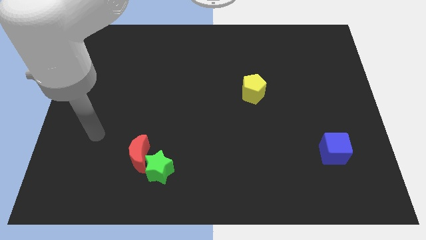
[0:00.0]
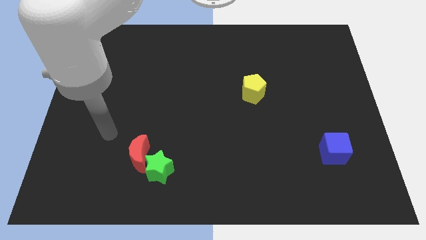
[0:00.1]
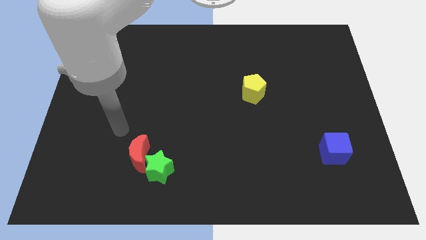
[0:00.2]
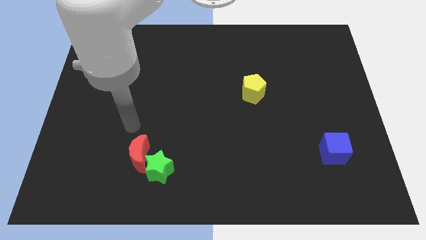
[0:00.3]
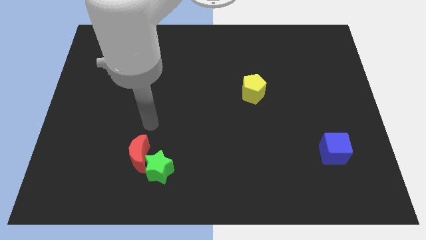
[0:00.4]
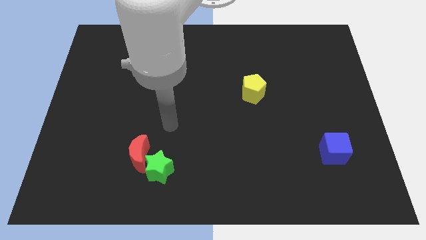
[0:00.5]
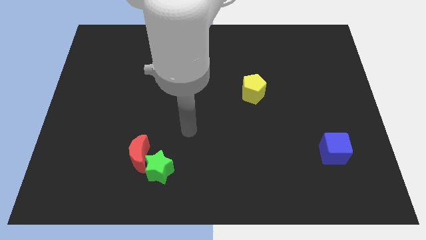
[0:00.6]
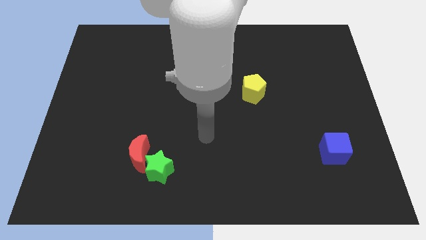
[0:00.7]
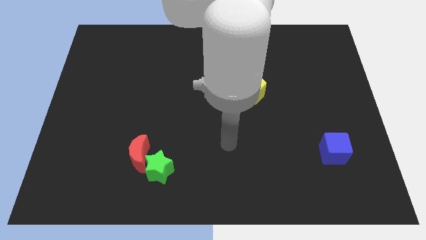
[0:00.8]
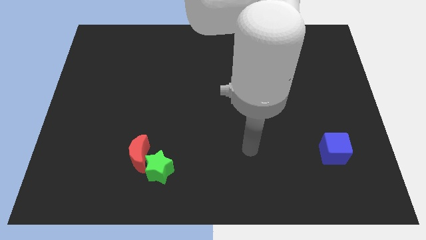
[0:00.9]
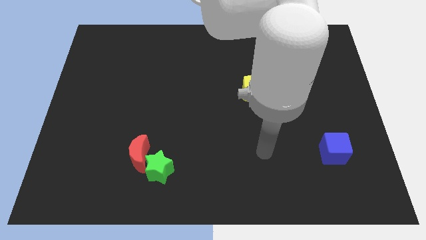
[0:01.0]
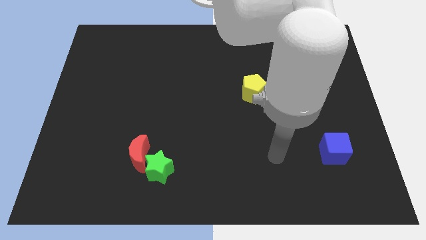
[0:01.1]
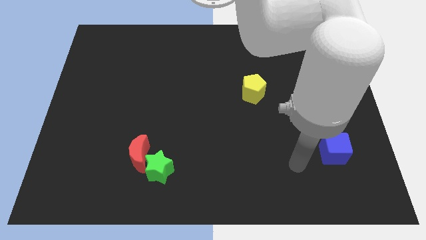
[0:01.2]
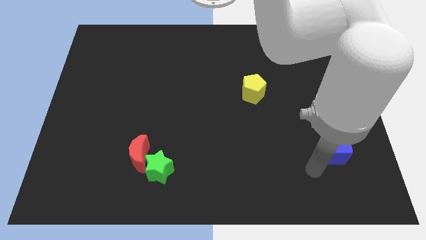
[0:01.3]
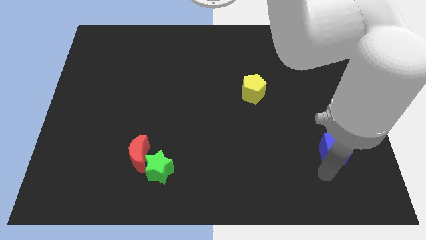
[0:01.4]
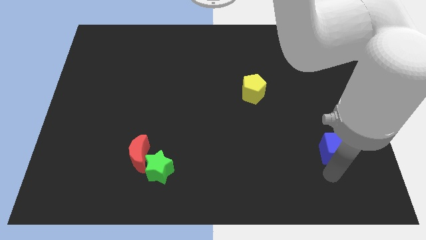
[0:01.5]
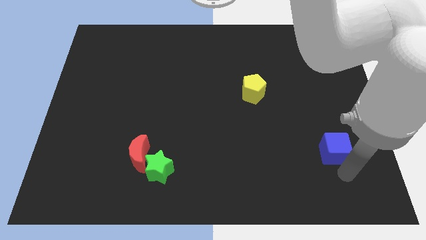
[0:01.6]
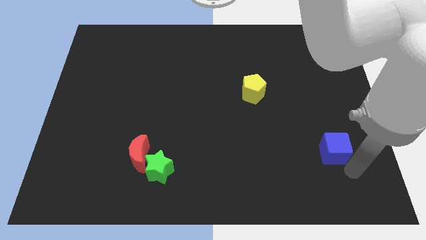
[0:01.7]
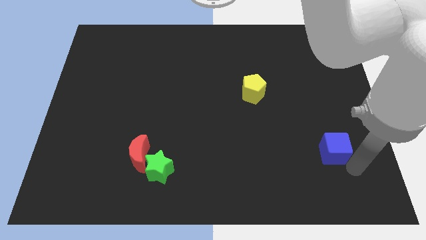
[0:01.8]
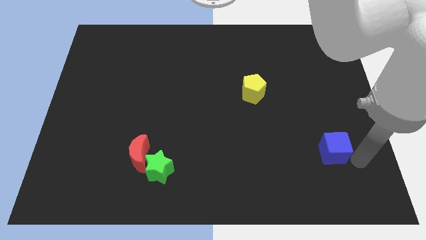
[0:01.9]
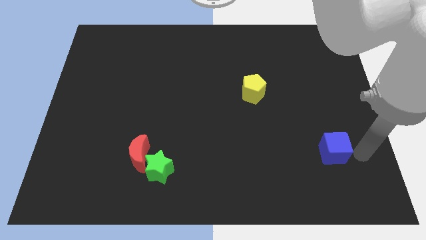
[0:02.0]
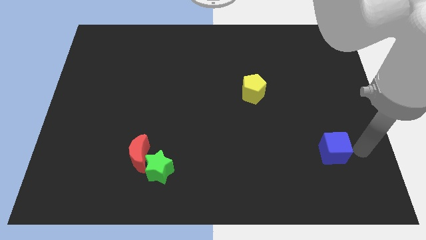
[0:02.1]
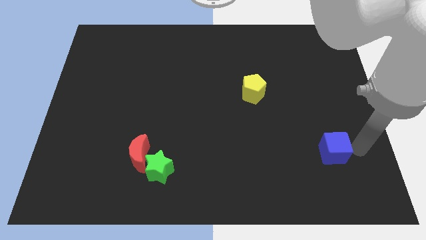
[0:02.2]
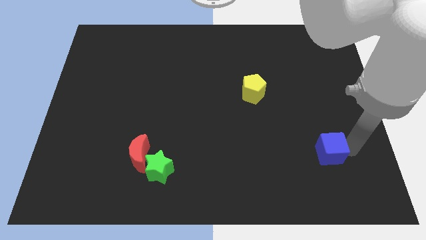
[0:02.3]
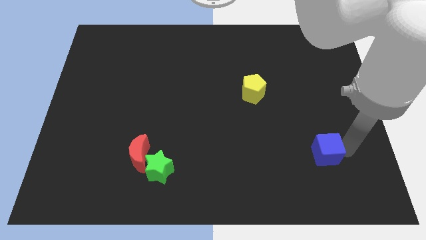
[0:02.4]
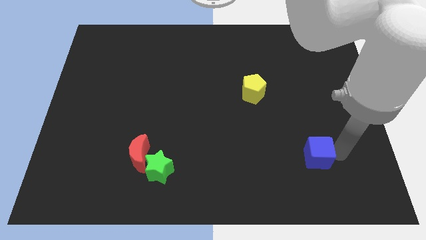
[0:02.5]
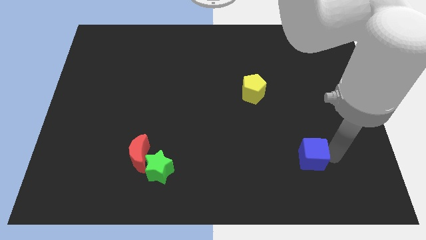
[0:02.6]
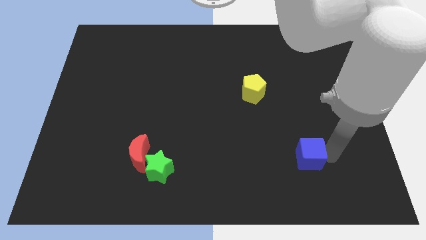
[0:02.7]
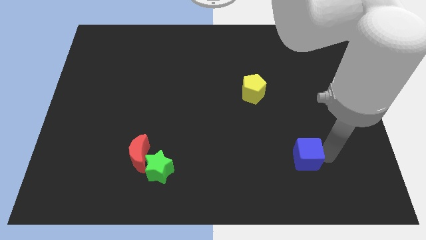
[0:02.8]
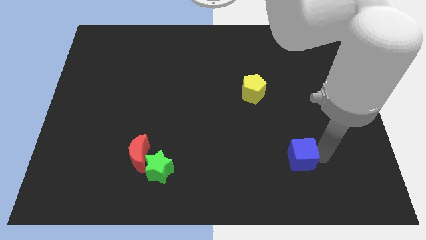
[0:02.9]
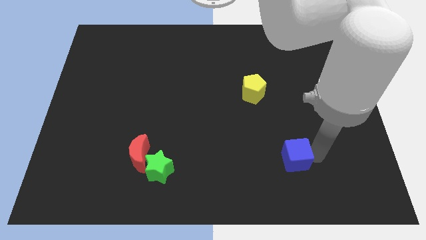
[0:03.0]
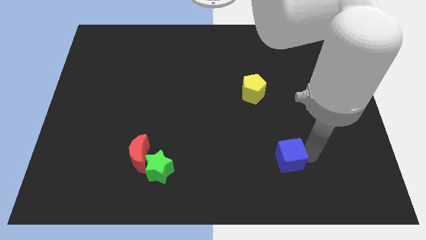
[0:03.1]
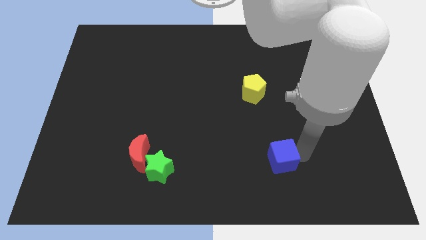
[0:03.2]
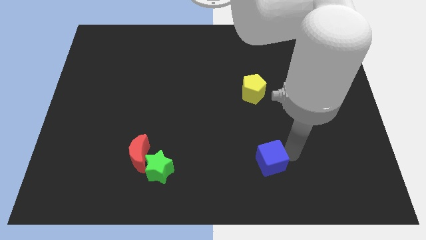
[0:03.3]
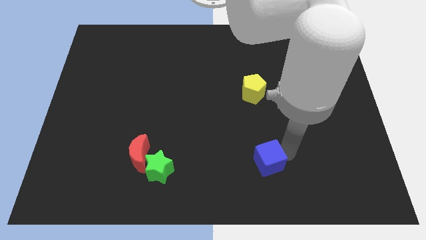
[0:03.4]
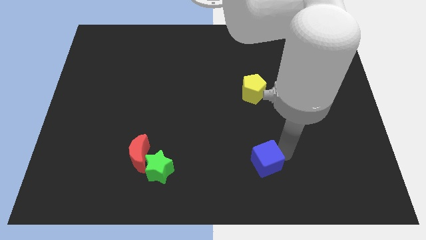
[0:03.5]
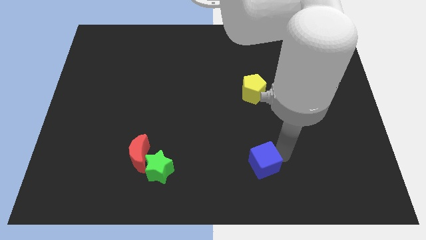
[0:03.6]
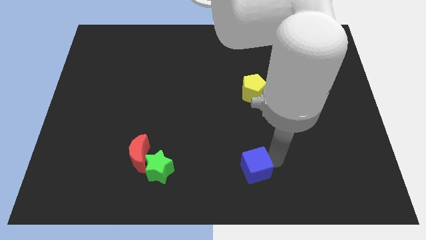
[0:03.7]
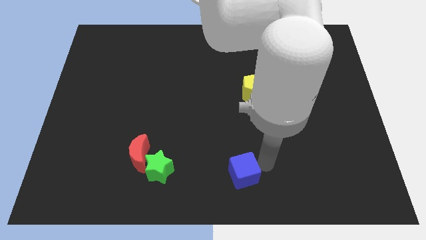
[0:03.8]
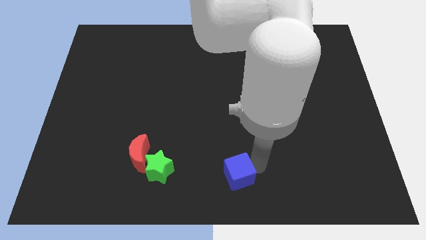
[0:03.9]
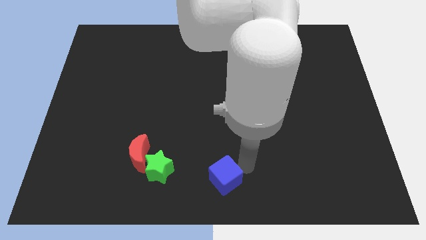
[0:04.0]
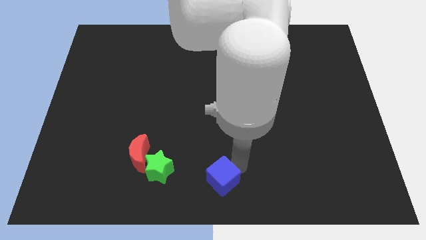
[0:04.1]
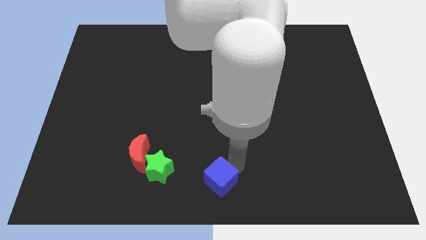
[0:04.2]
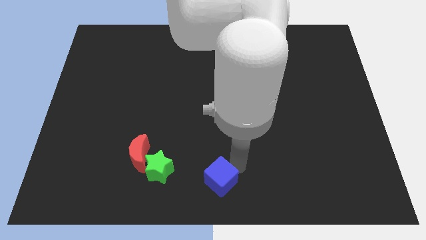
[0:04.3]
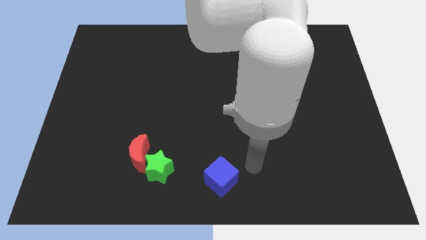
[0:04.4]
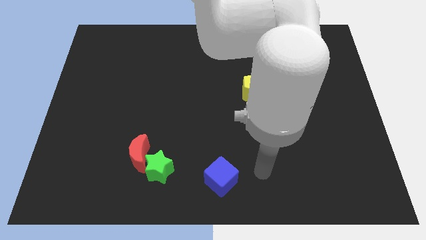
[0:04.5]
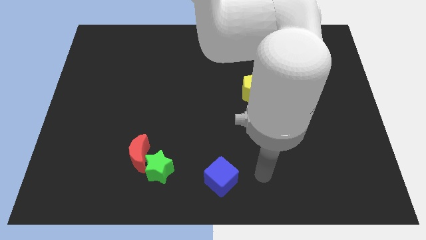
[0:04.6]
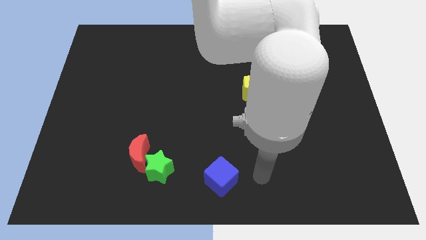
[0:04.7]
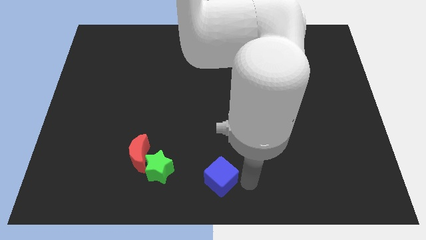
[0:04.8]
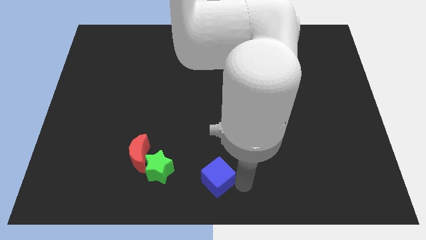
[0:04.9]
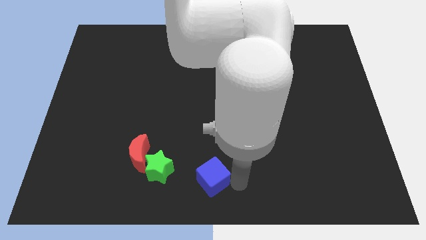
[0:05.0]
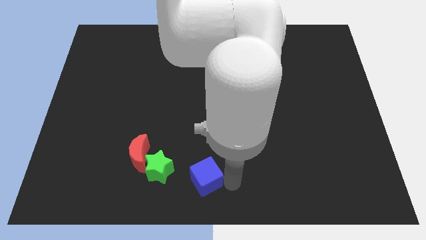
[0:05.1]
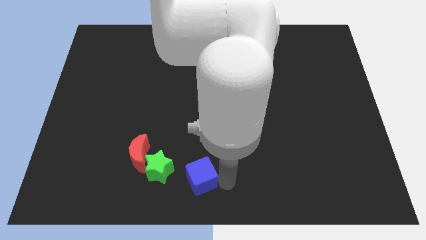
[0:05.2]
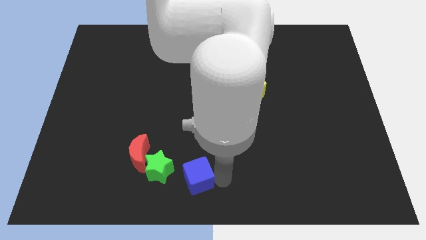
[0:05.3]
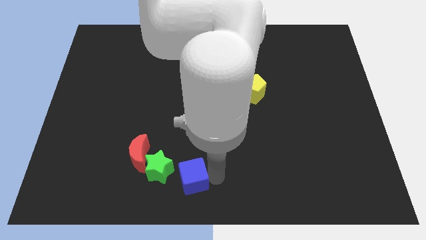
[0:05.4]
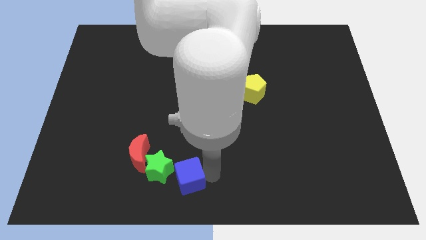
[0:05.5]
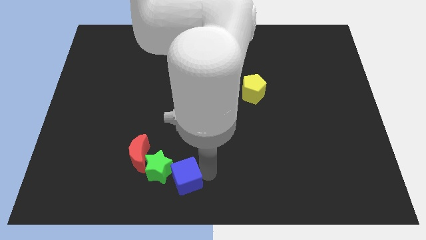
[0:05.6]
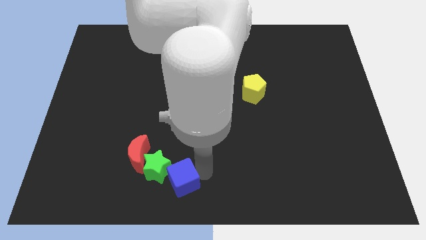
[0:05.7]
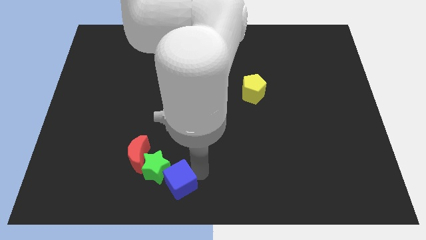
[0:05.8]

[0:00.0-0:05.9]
put the cube towards the green block

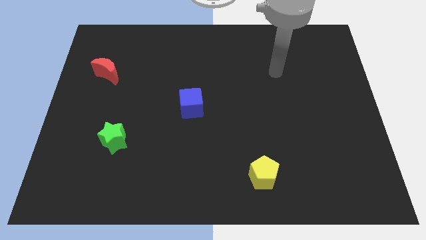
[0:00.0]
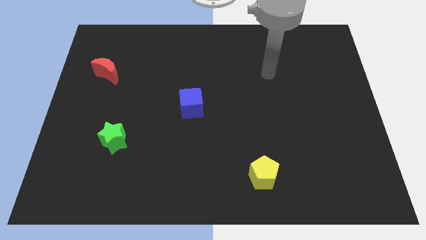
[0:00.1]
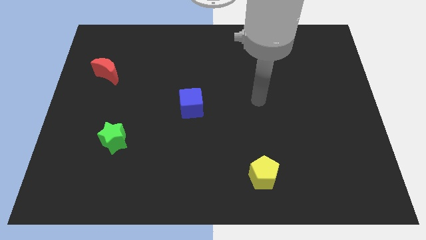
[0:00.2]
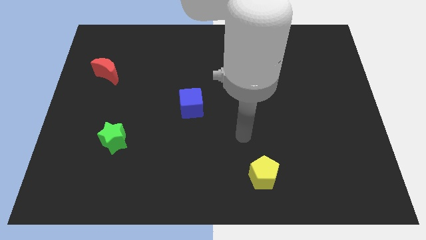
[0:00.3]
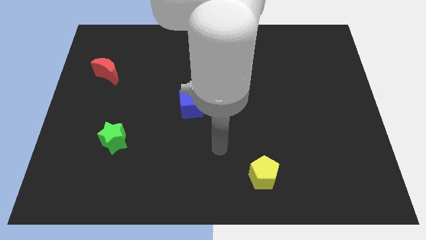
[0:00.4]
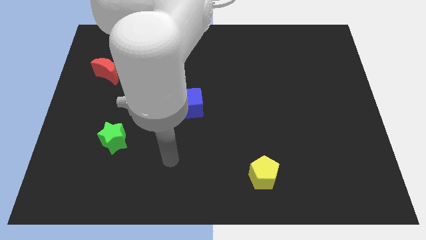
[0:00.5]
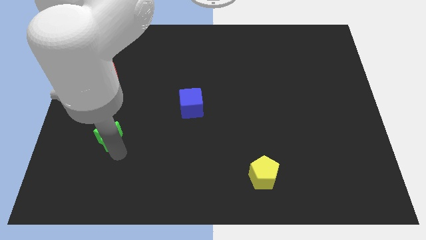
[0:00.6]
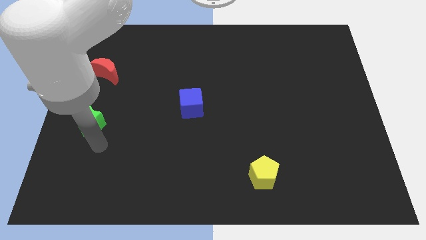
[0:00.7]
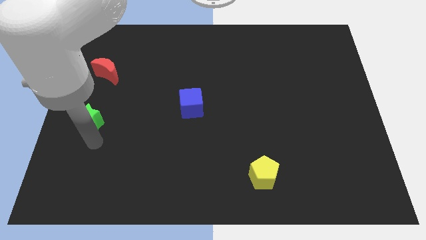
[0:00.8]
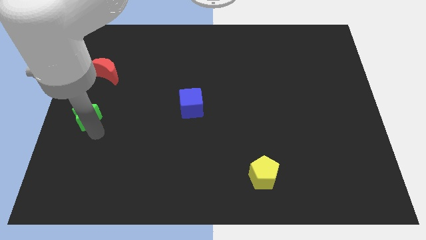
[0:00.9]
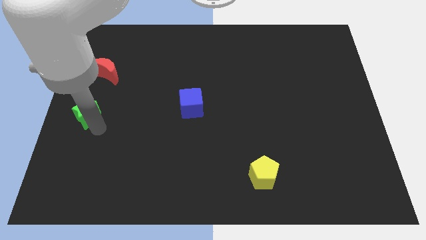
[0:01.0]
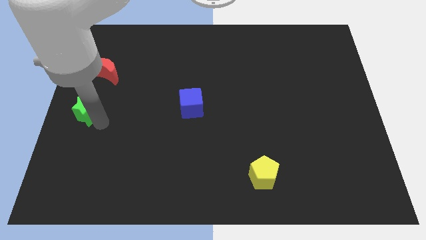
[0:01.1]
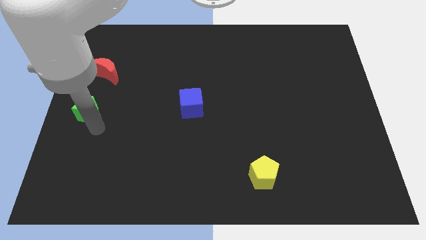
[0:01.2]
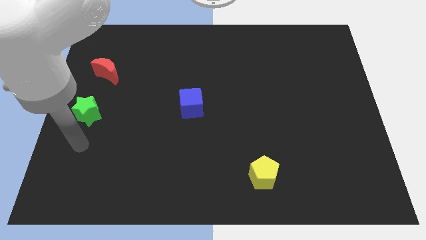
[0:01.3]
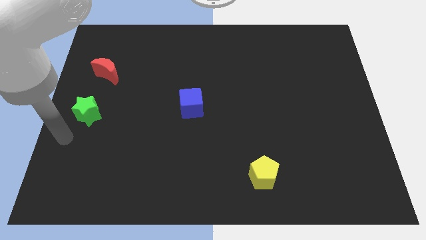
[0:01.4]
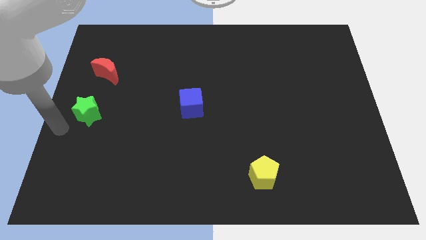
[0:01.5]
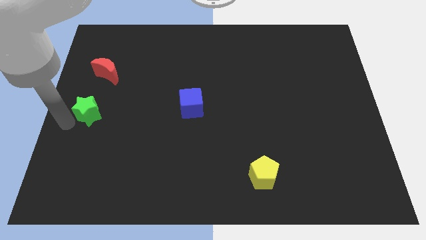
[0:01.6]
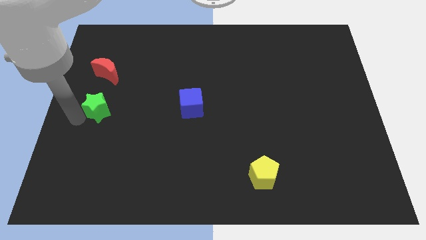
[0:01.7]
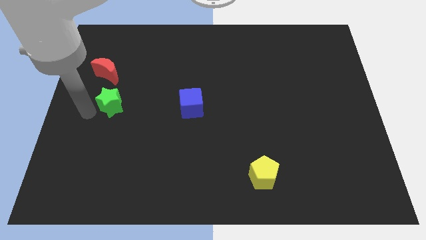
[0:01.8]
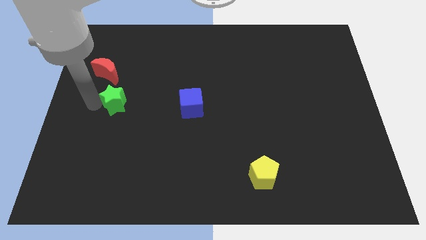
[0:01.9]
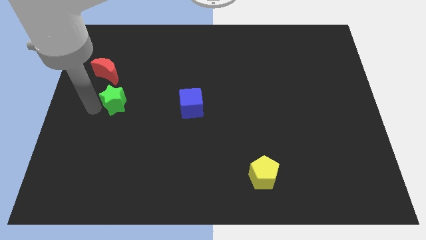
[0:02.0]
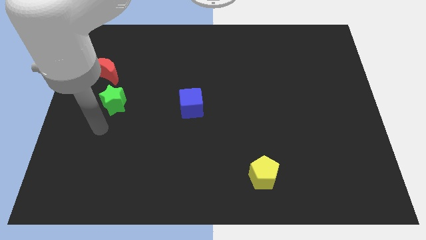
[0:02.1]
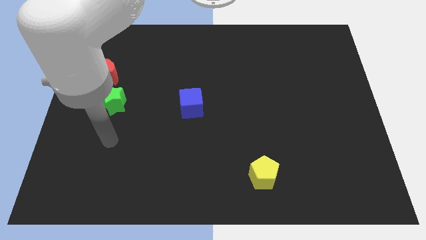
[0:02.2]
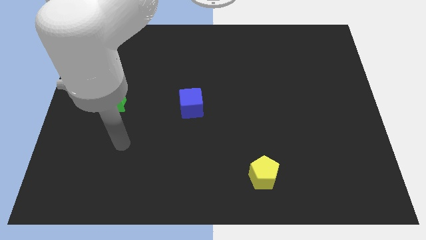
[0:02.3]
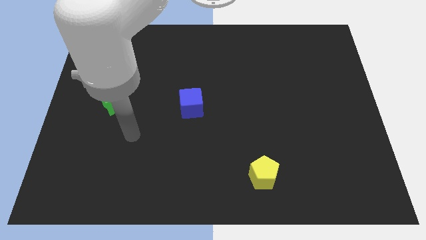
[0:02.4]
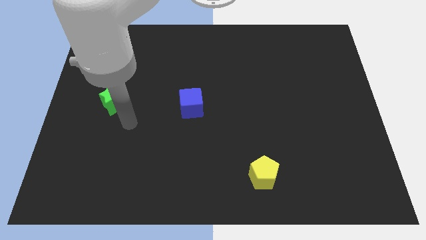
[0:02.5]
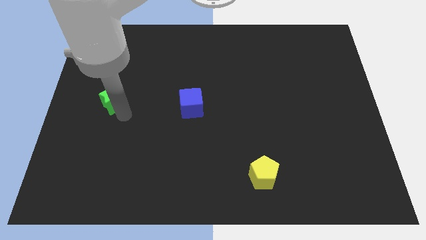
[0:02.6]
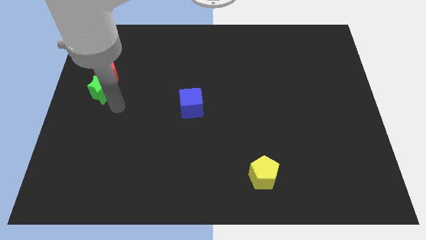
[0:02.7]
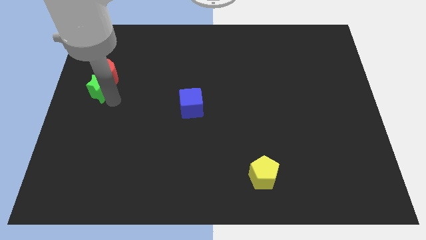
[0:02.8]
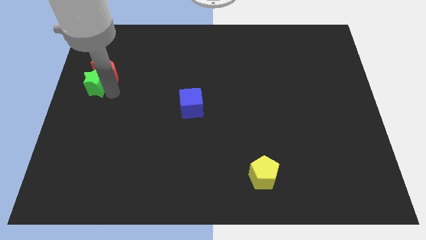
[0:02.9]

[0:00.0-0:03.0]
move the green star towards the moon

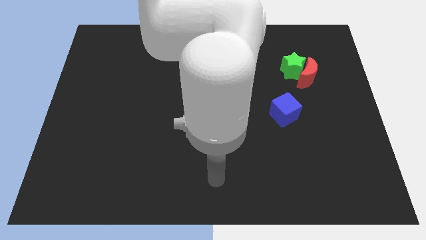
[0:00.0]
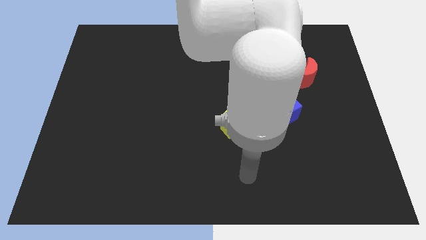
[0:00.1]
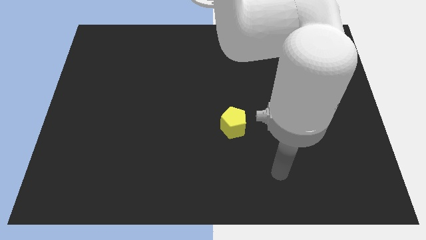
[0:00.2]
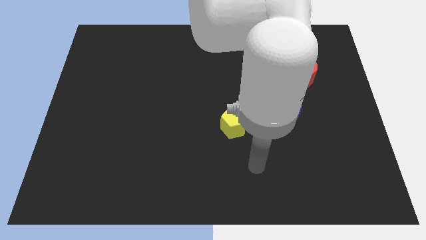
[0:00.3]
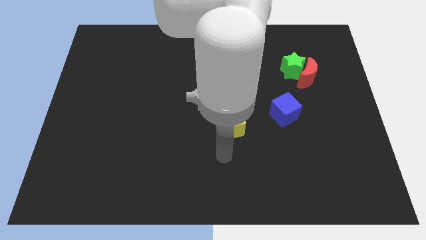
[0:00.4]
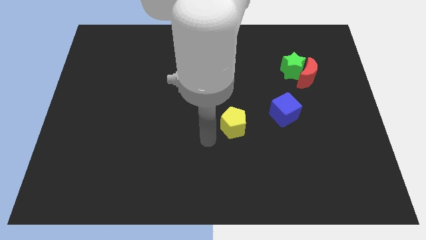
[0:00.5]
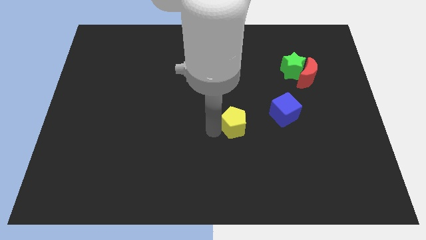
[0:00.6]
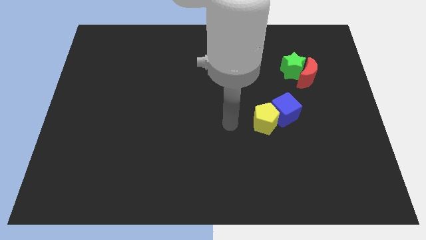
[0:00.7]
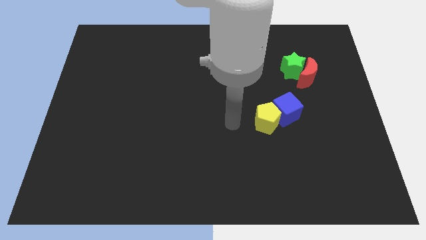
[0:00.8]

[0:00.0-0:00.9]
put the yellow block towards the blue cube
